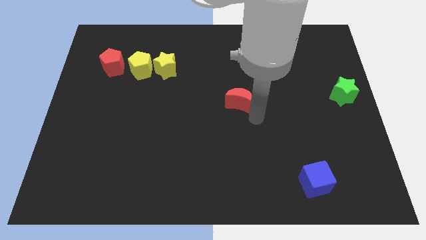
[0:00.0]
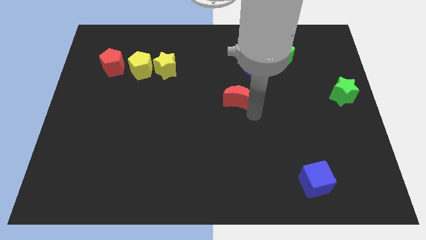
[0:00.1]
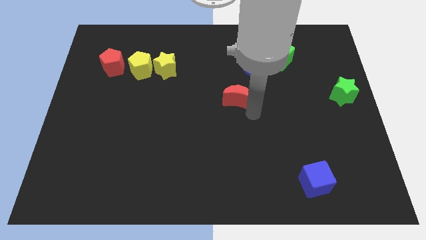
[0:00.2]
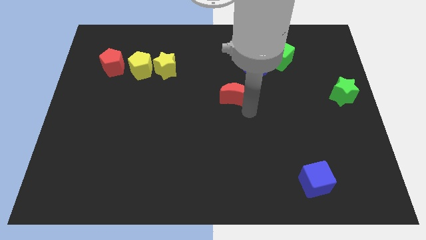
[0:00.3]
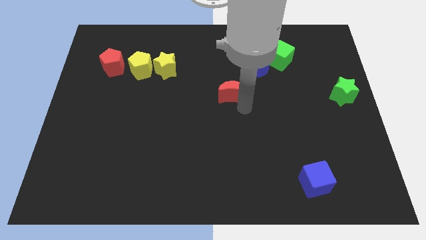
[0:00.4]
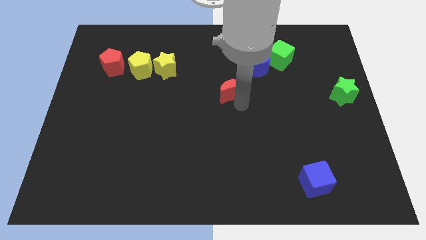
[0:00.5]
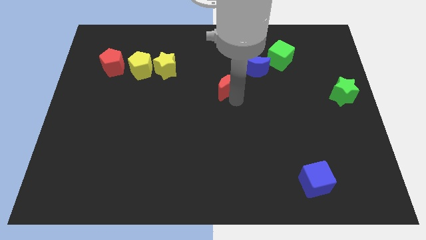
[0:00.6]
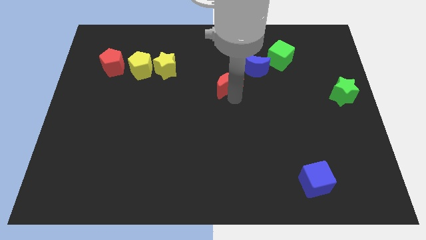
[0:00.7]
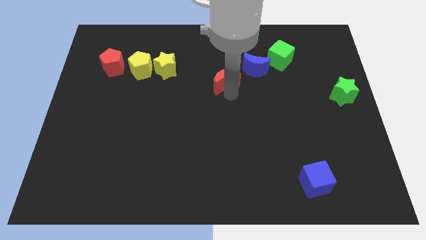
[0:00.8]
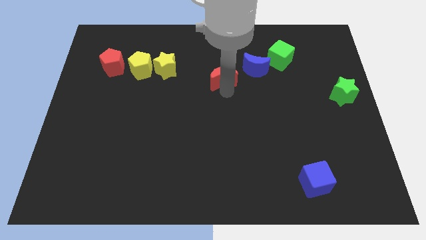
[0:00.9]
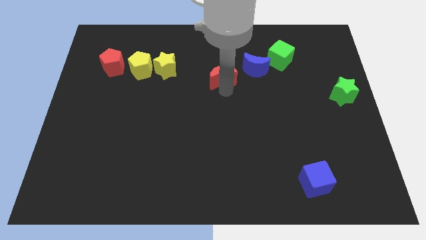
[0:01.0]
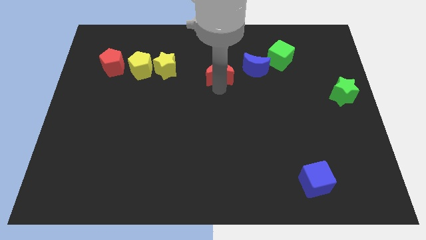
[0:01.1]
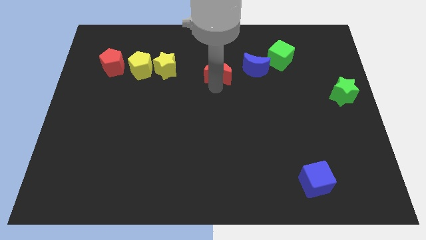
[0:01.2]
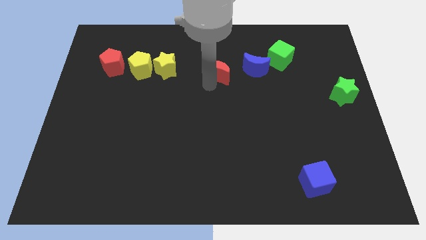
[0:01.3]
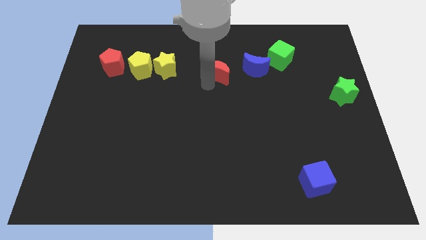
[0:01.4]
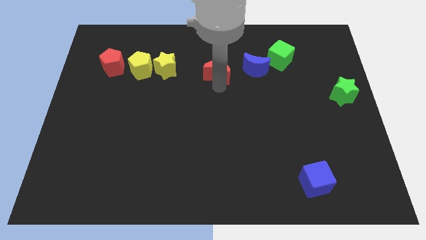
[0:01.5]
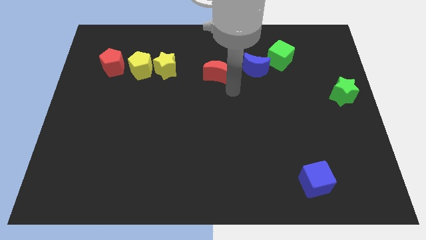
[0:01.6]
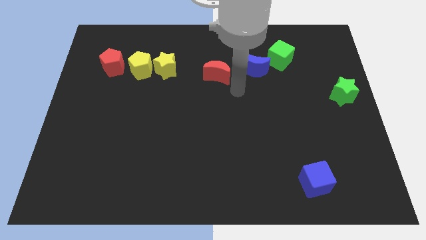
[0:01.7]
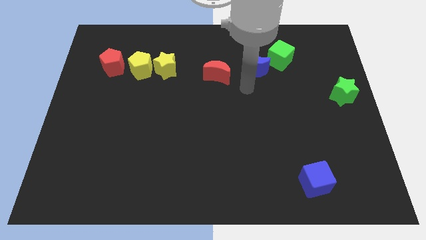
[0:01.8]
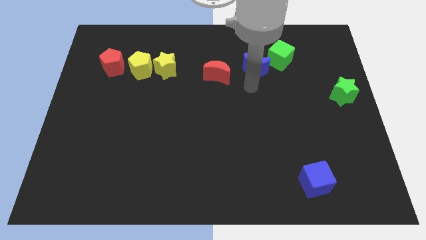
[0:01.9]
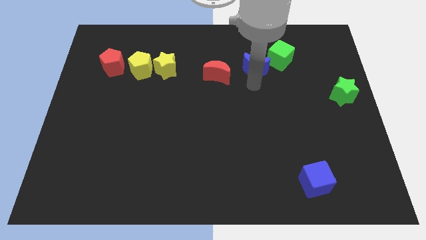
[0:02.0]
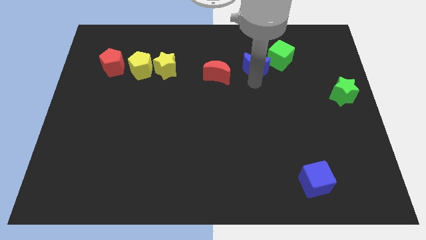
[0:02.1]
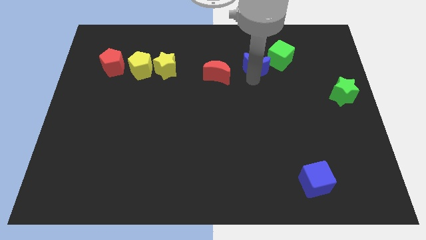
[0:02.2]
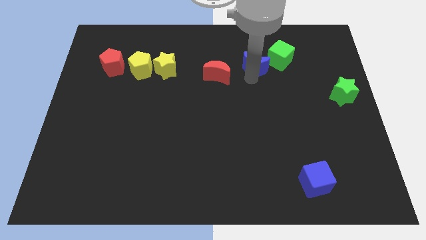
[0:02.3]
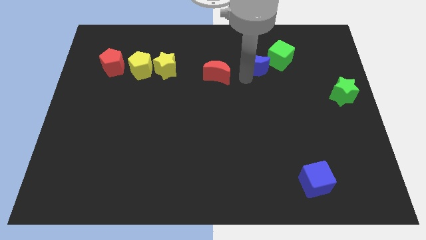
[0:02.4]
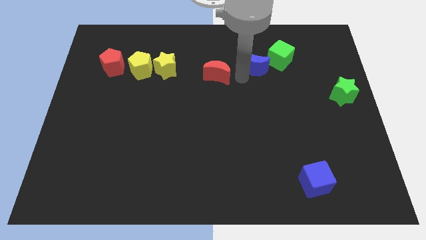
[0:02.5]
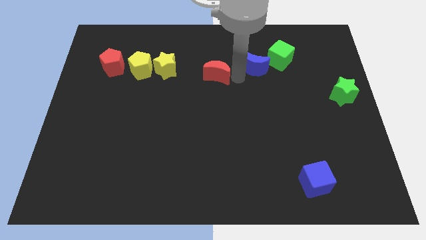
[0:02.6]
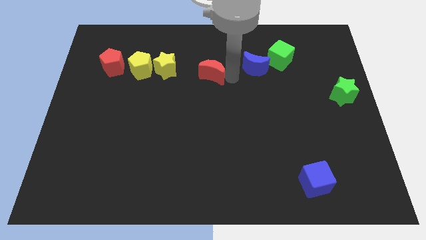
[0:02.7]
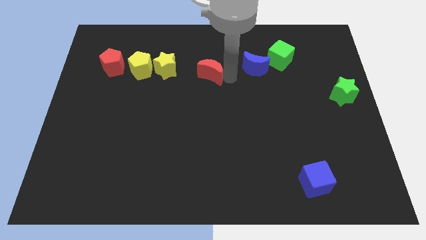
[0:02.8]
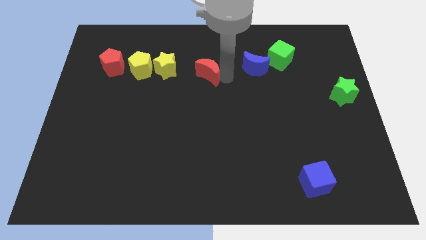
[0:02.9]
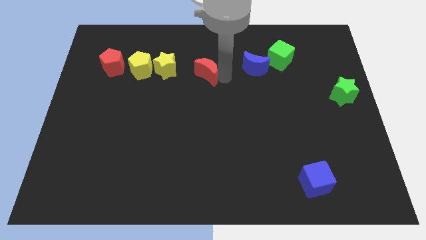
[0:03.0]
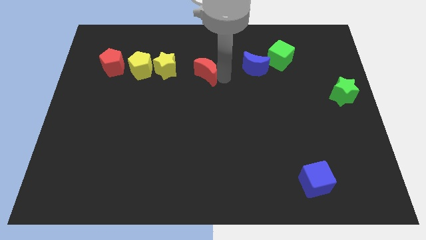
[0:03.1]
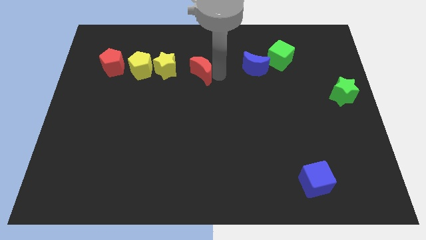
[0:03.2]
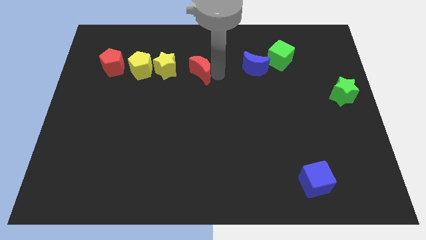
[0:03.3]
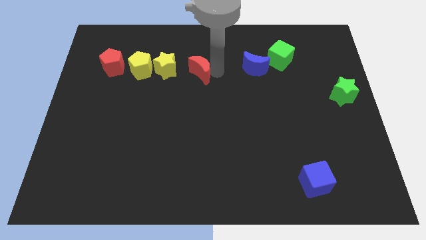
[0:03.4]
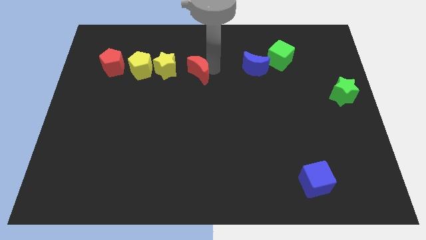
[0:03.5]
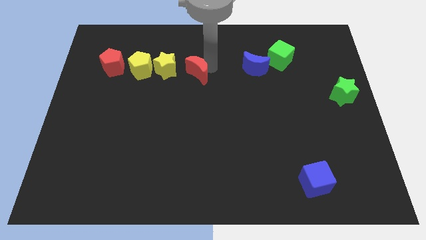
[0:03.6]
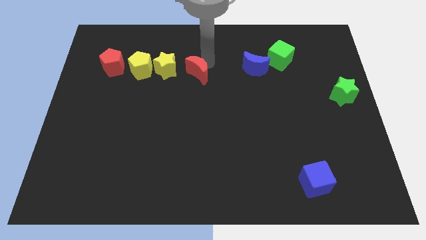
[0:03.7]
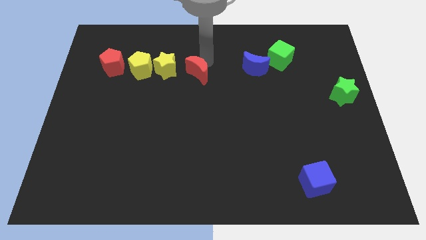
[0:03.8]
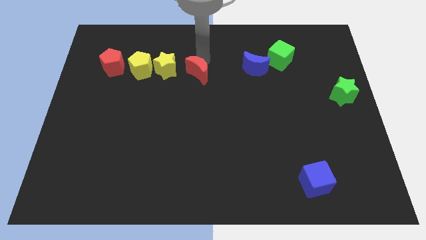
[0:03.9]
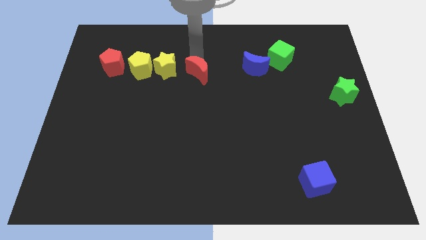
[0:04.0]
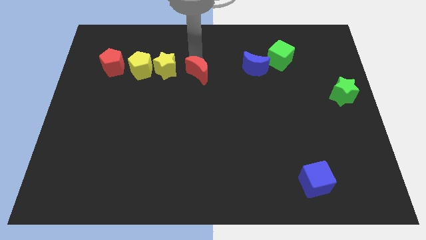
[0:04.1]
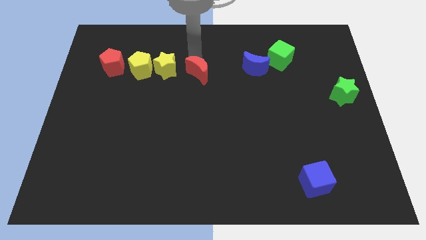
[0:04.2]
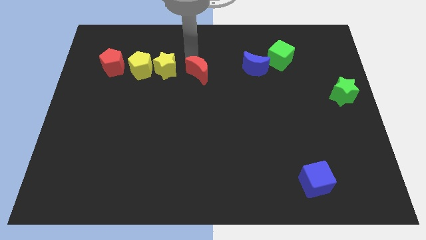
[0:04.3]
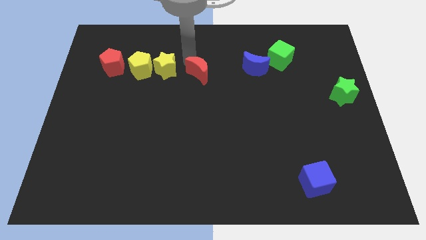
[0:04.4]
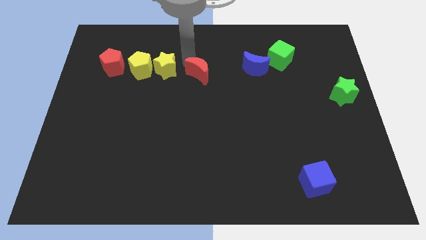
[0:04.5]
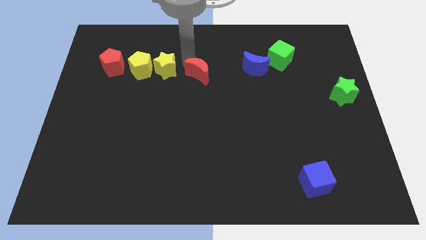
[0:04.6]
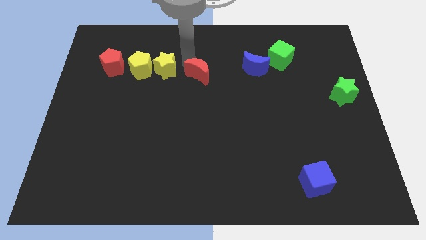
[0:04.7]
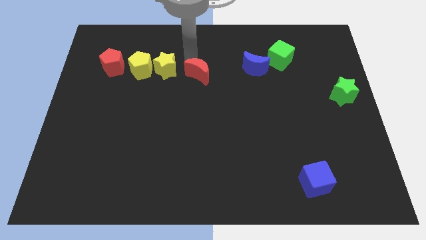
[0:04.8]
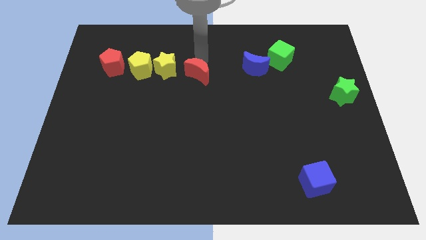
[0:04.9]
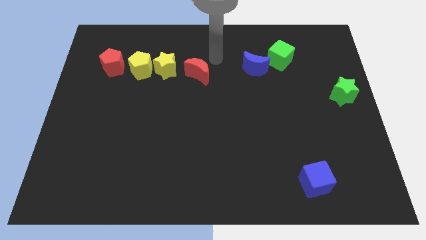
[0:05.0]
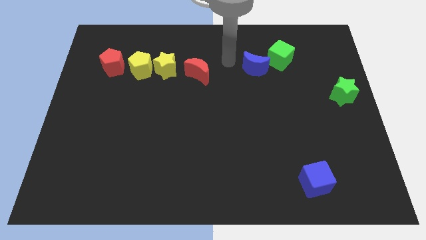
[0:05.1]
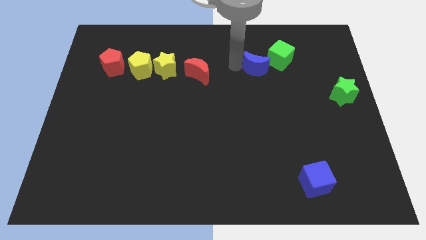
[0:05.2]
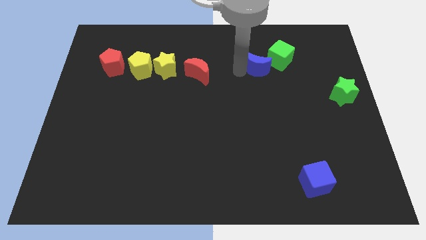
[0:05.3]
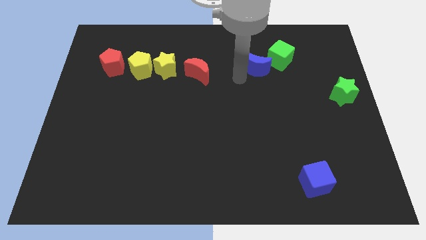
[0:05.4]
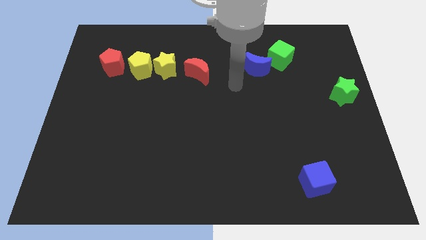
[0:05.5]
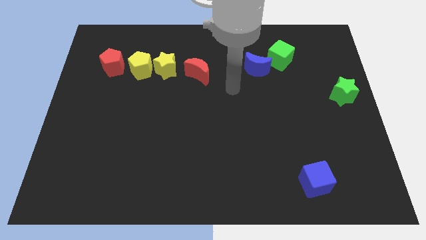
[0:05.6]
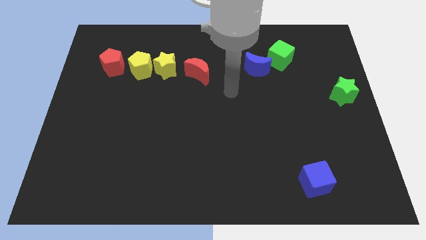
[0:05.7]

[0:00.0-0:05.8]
move the red crescent to the right of the yellow star

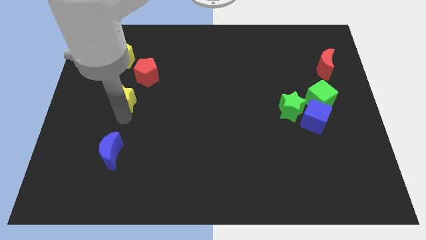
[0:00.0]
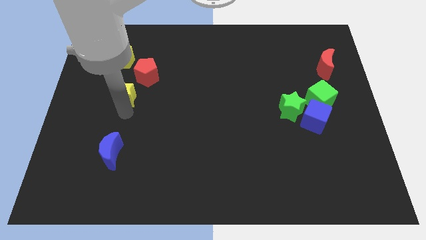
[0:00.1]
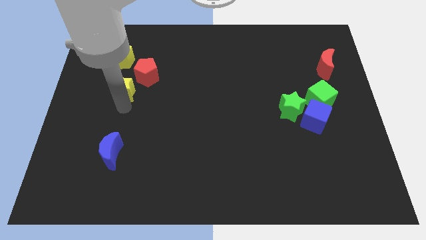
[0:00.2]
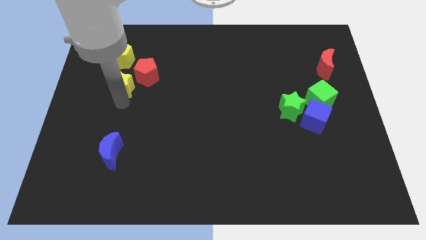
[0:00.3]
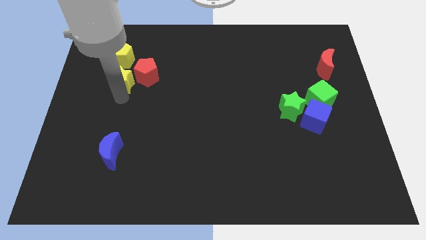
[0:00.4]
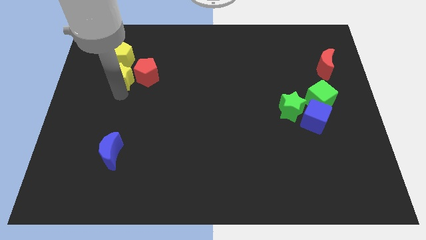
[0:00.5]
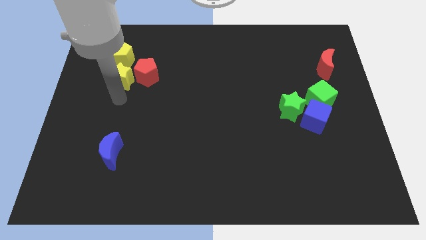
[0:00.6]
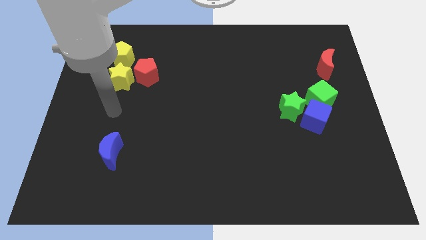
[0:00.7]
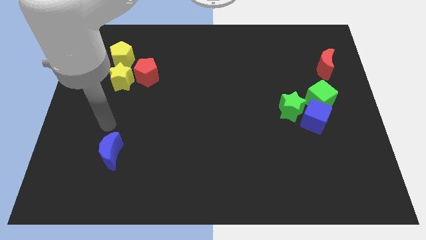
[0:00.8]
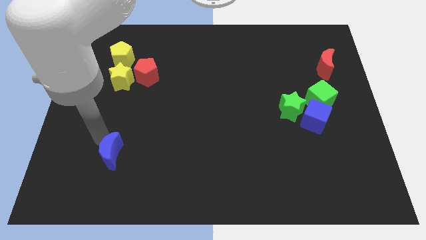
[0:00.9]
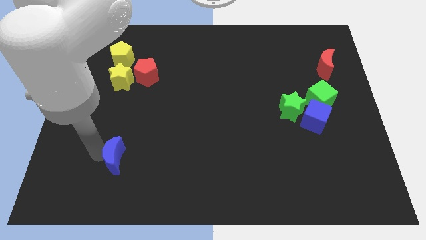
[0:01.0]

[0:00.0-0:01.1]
place the yellow star into the yellow pentagon

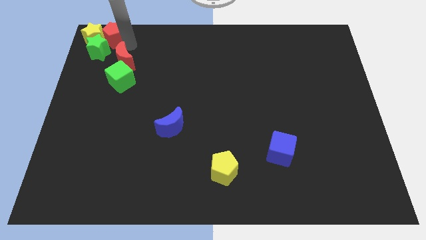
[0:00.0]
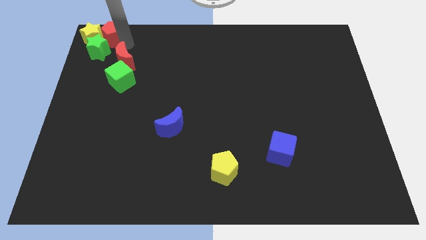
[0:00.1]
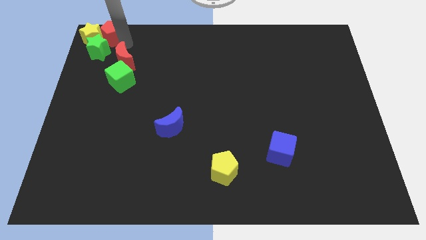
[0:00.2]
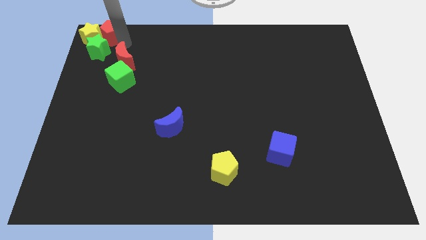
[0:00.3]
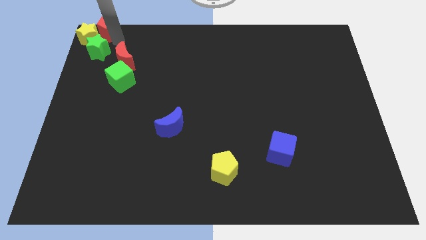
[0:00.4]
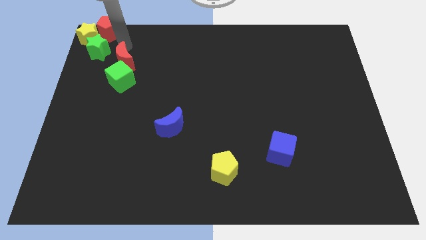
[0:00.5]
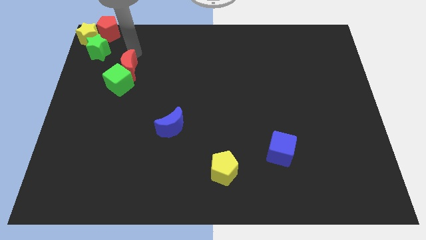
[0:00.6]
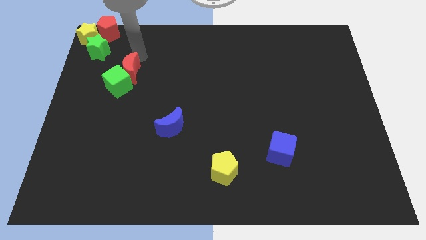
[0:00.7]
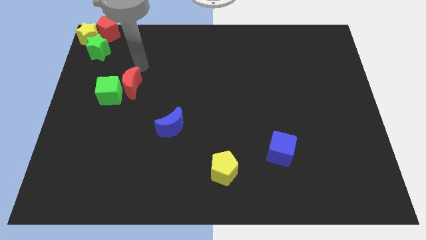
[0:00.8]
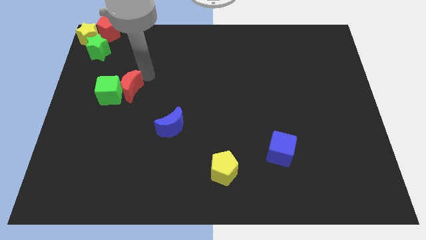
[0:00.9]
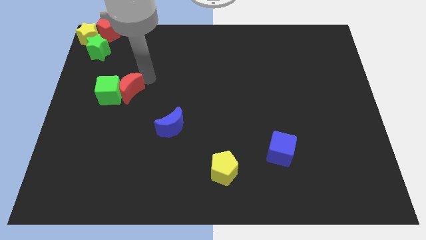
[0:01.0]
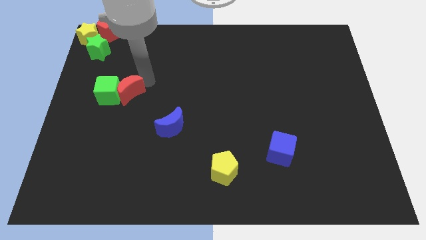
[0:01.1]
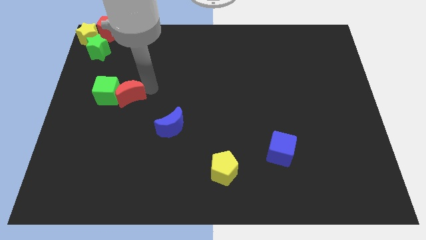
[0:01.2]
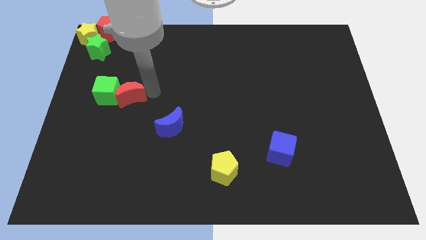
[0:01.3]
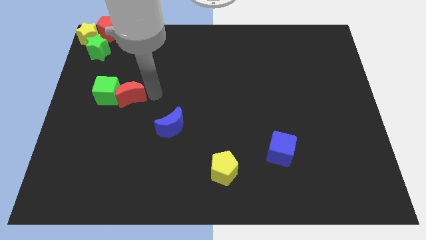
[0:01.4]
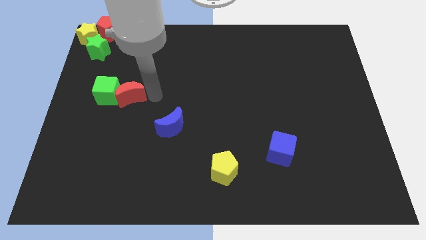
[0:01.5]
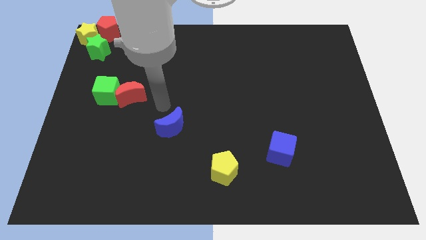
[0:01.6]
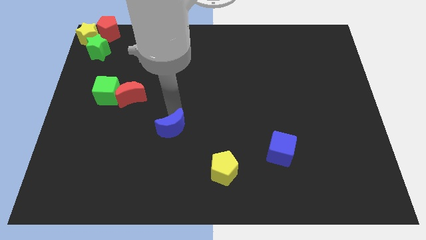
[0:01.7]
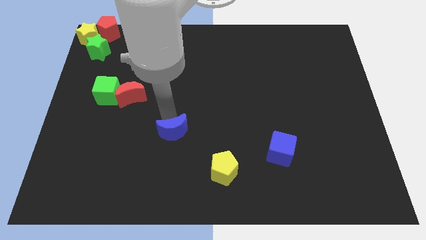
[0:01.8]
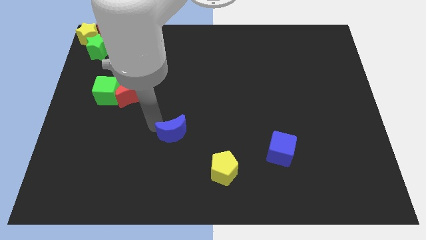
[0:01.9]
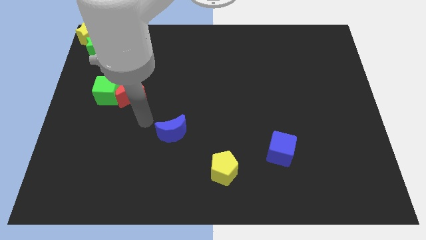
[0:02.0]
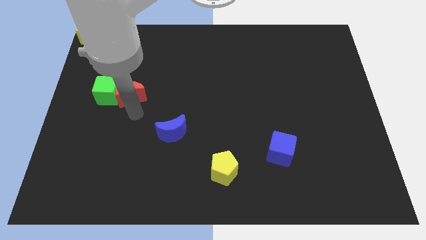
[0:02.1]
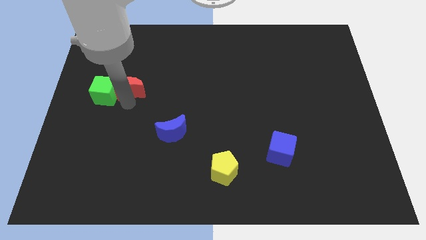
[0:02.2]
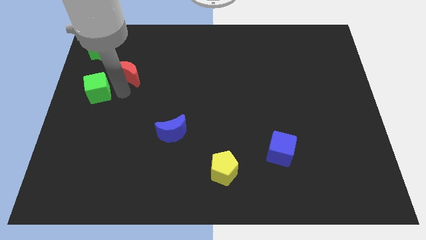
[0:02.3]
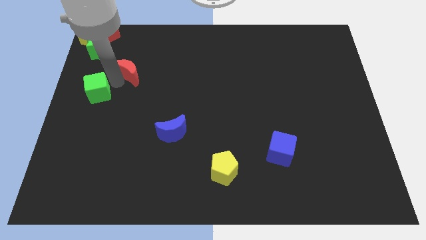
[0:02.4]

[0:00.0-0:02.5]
slightly push the blue moon to the bottom side of the board
